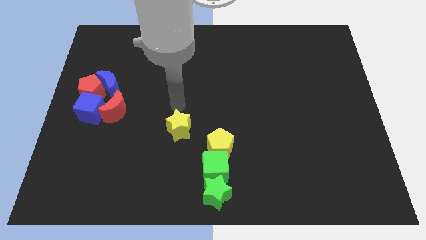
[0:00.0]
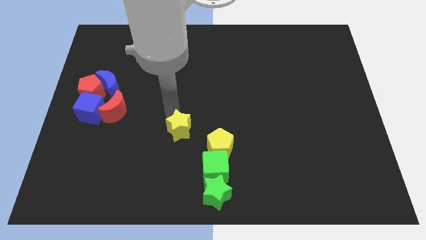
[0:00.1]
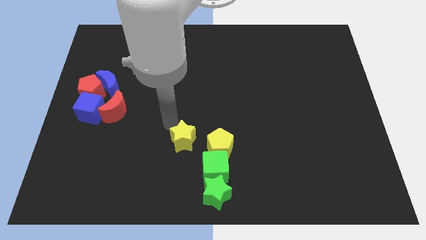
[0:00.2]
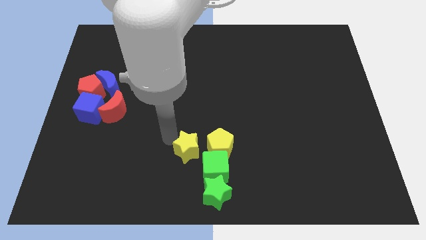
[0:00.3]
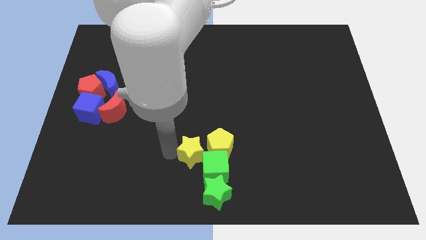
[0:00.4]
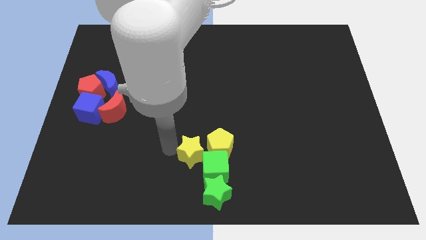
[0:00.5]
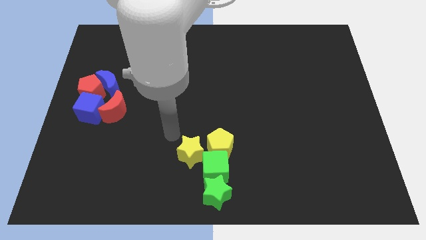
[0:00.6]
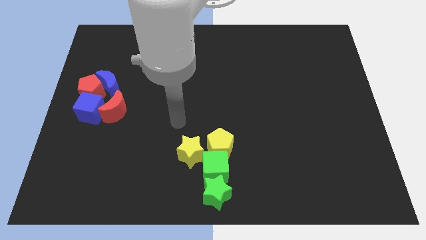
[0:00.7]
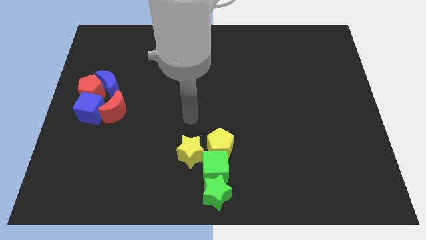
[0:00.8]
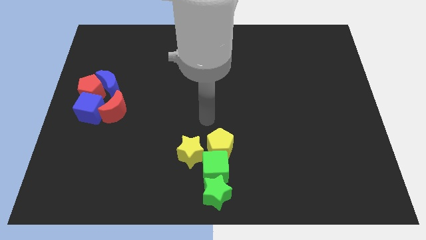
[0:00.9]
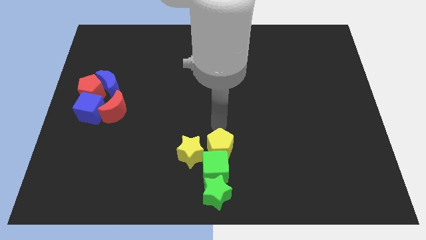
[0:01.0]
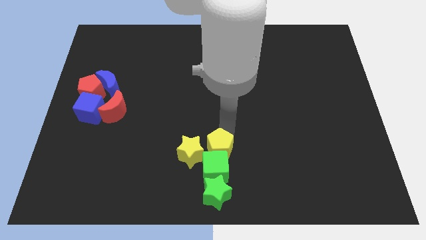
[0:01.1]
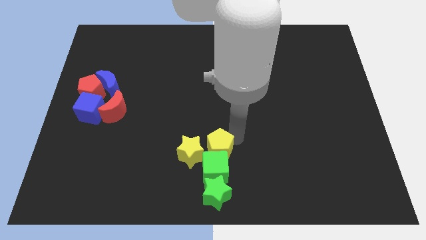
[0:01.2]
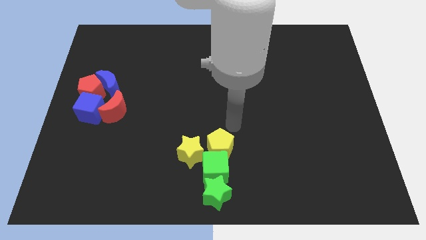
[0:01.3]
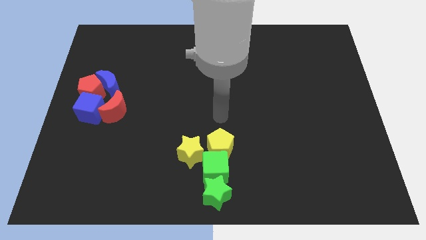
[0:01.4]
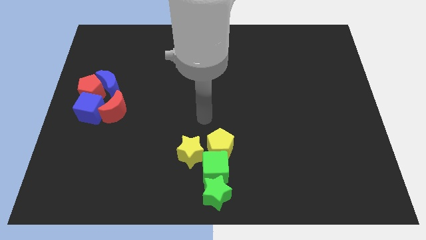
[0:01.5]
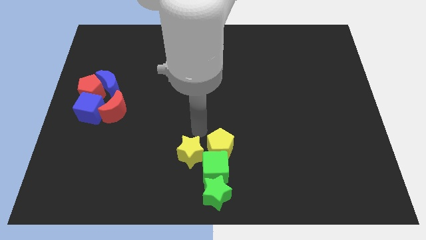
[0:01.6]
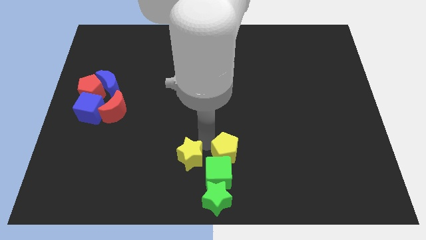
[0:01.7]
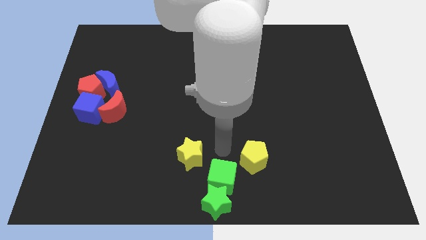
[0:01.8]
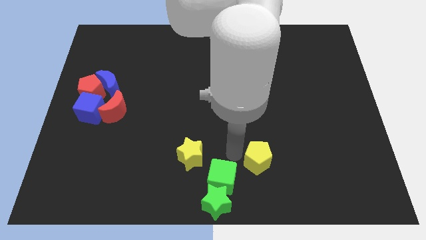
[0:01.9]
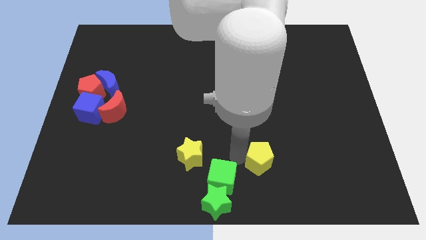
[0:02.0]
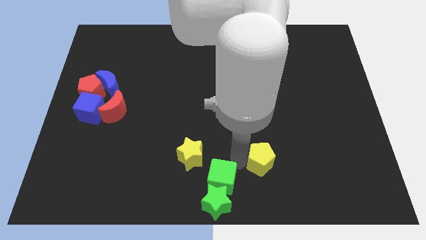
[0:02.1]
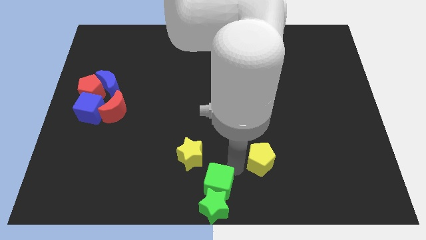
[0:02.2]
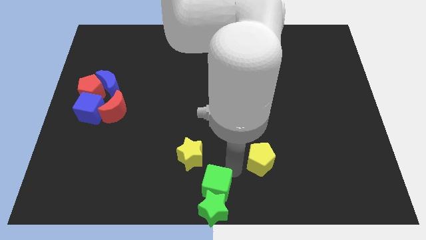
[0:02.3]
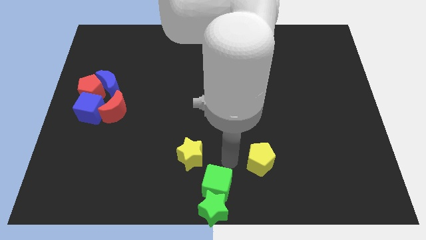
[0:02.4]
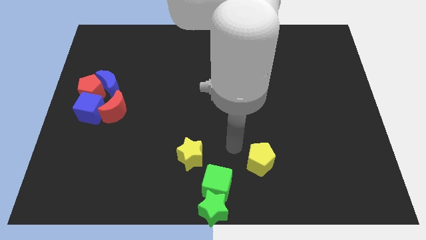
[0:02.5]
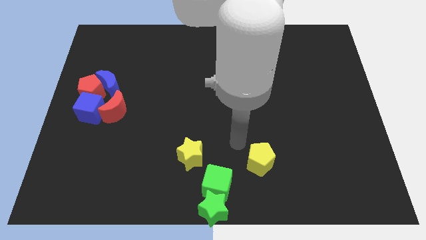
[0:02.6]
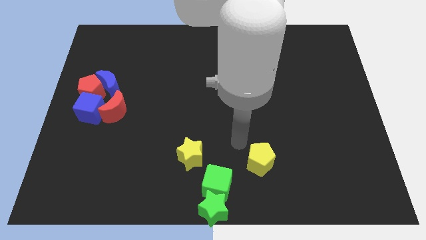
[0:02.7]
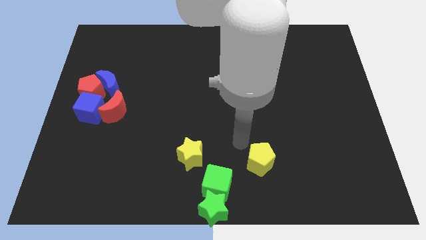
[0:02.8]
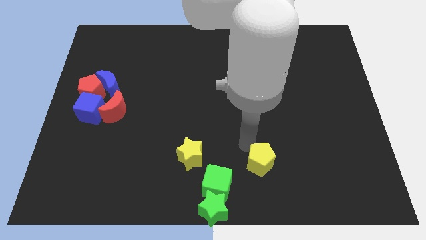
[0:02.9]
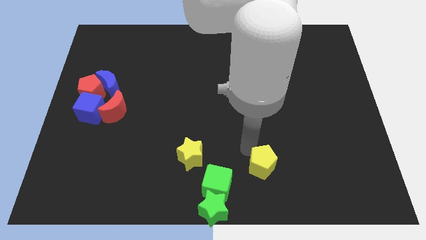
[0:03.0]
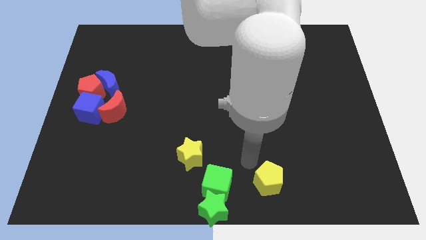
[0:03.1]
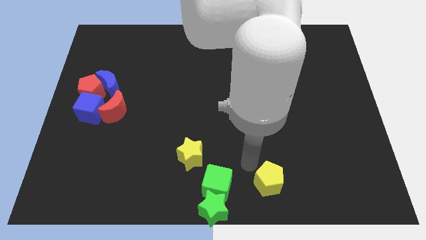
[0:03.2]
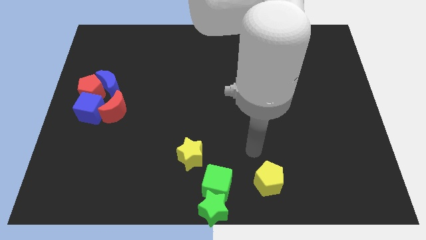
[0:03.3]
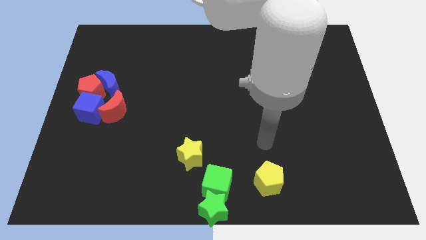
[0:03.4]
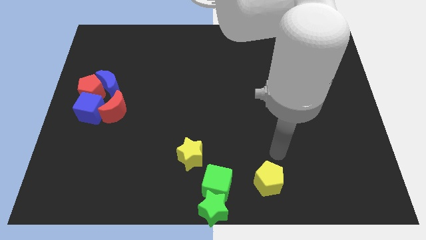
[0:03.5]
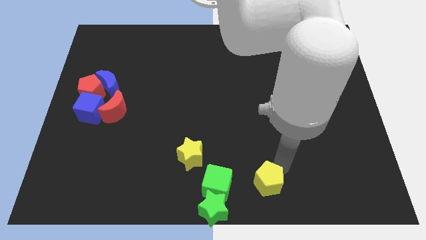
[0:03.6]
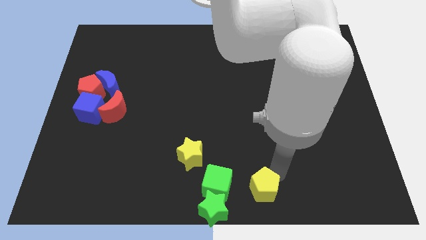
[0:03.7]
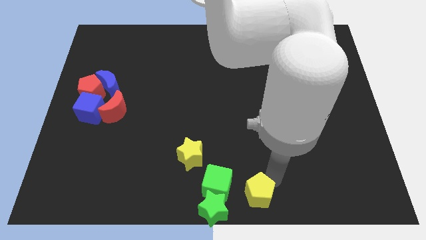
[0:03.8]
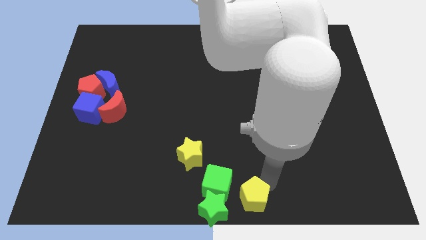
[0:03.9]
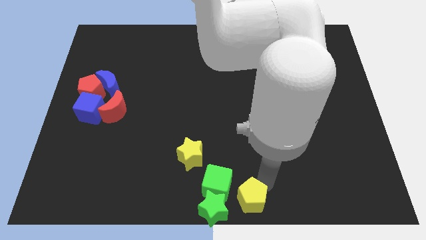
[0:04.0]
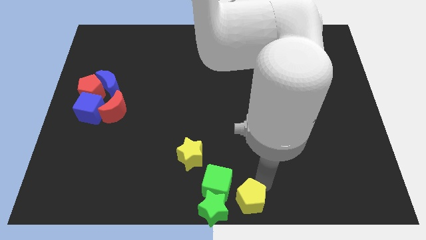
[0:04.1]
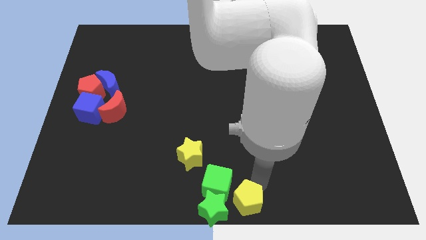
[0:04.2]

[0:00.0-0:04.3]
push the yellow pentagon to the bottom center of the board

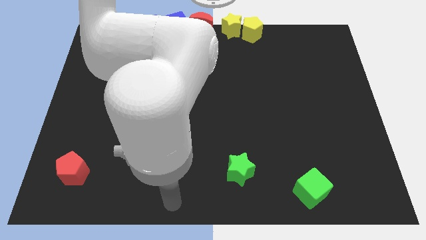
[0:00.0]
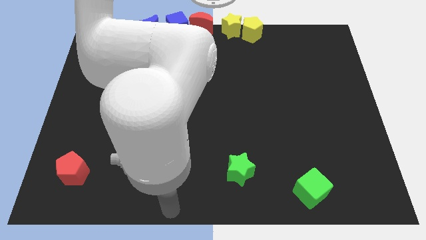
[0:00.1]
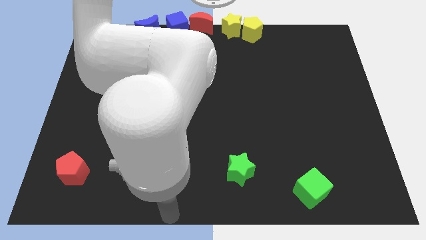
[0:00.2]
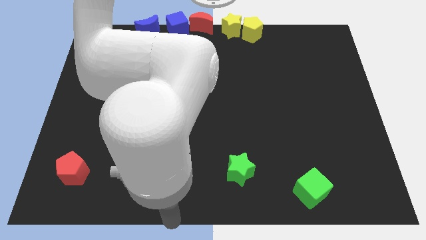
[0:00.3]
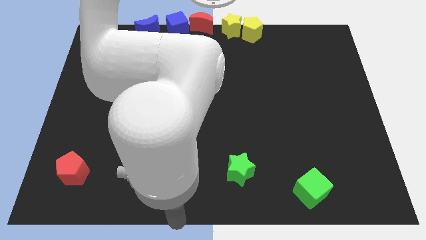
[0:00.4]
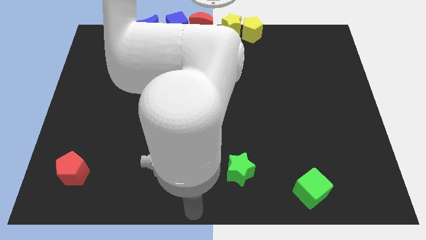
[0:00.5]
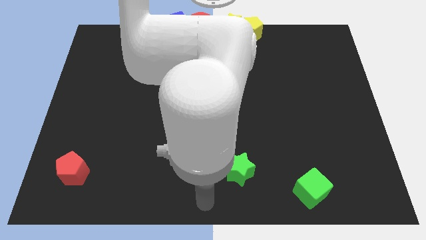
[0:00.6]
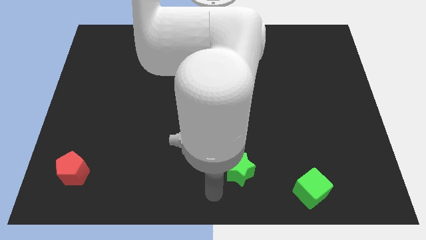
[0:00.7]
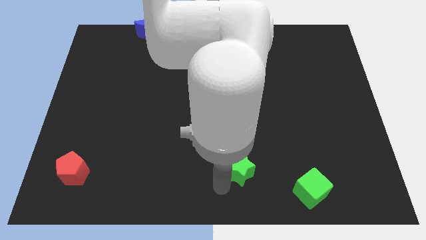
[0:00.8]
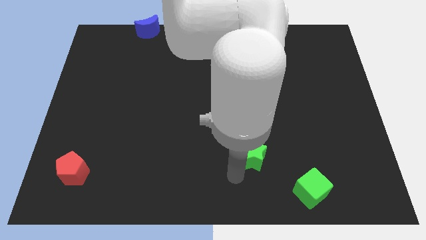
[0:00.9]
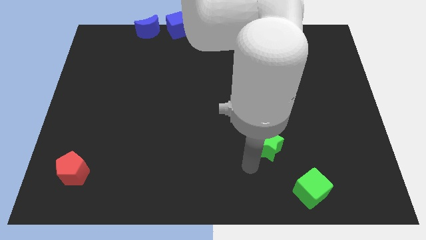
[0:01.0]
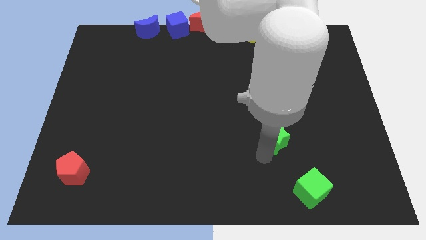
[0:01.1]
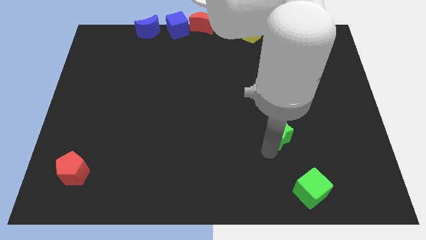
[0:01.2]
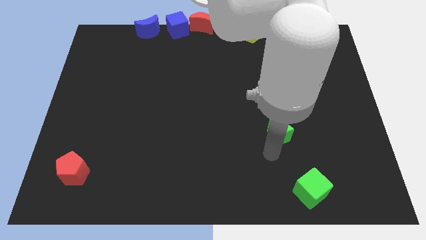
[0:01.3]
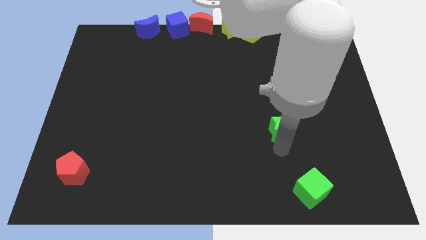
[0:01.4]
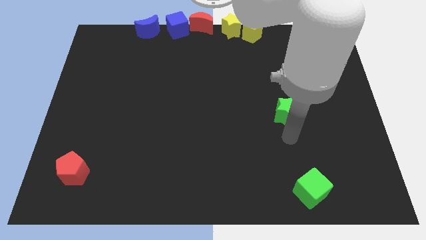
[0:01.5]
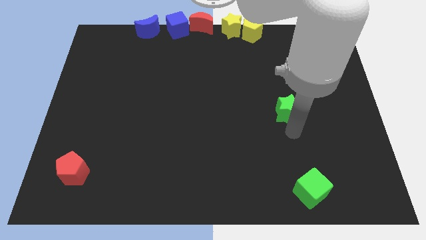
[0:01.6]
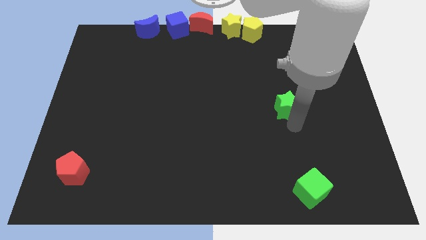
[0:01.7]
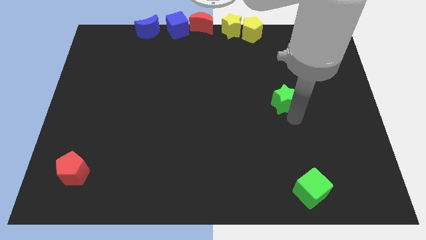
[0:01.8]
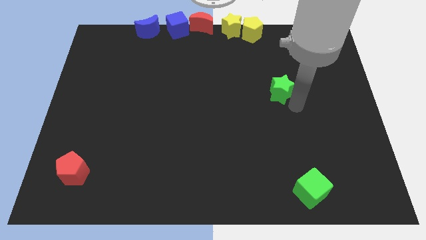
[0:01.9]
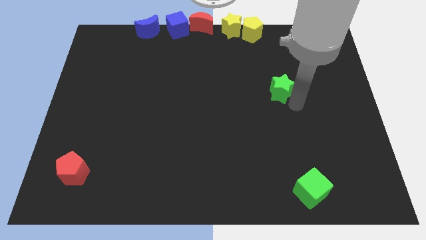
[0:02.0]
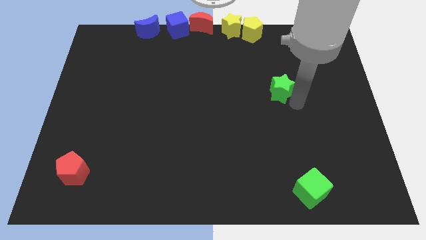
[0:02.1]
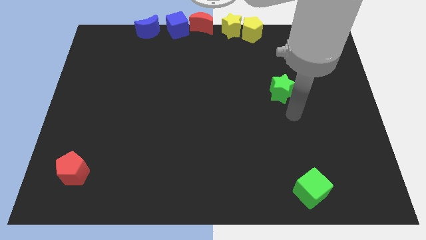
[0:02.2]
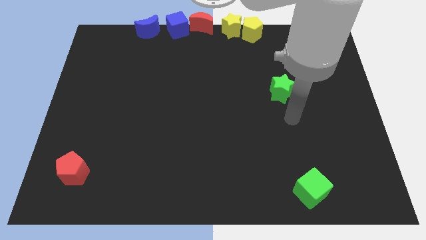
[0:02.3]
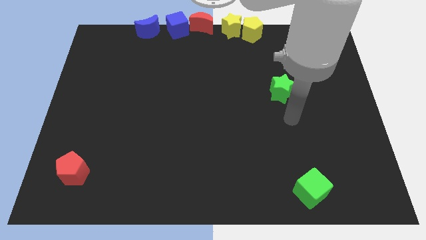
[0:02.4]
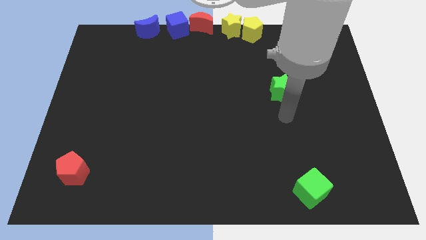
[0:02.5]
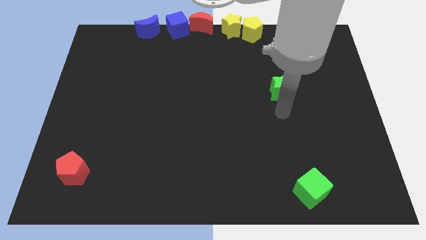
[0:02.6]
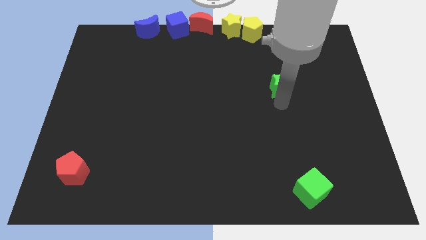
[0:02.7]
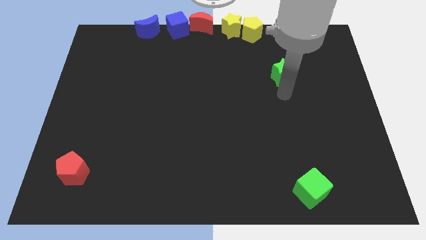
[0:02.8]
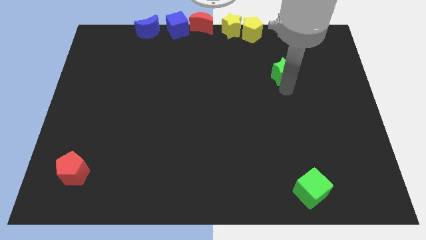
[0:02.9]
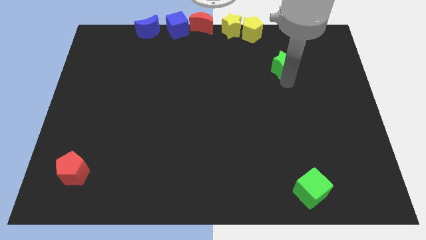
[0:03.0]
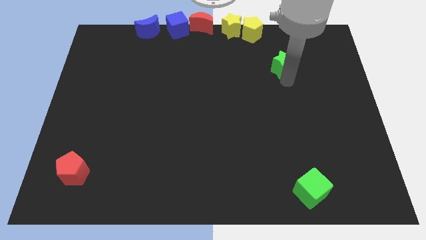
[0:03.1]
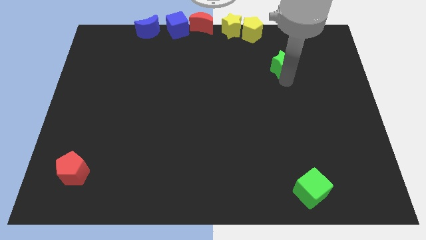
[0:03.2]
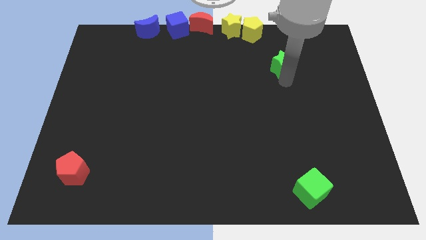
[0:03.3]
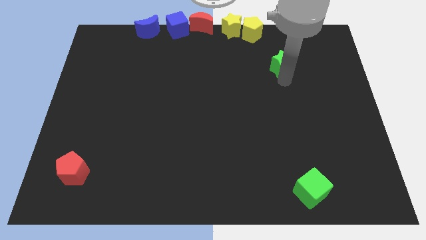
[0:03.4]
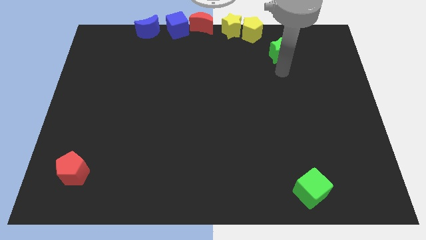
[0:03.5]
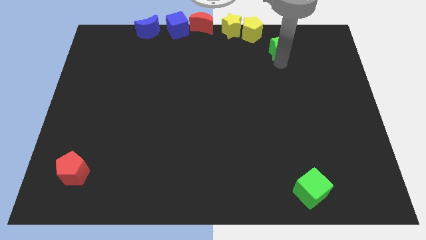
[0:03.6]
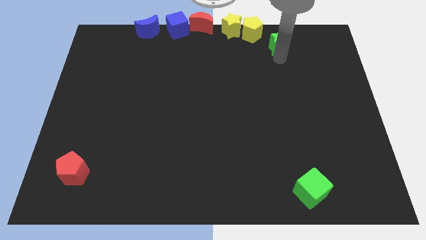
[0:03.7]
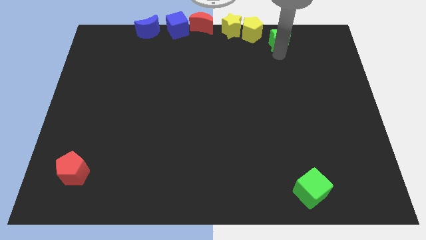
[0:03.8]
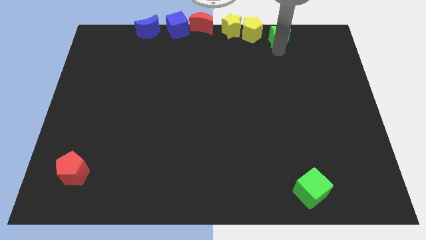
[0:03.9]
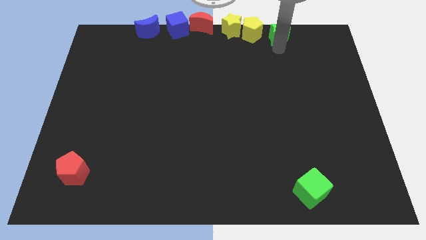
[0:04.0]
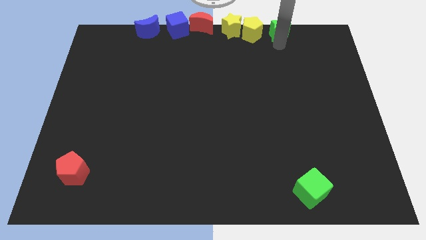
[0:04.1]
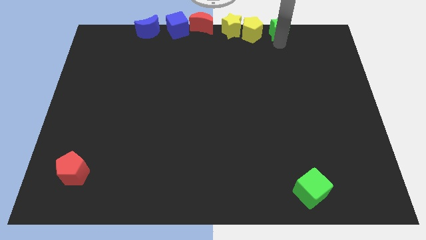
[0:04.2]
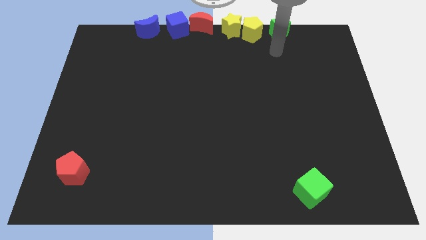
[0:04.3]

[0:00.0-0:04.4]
put the green star to the right of the yellow pentagon

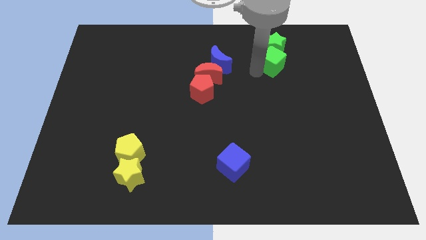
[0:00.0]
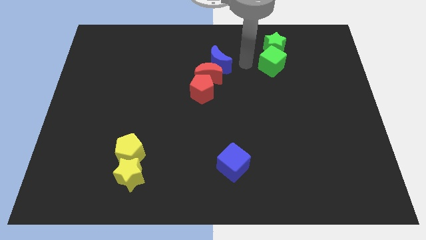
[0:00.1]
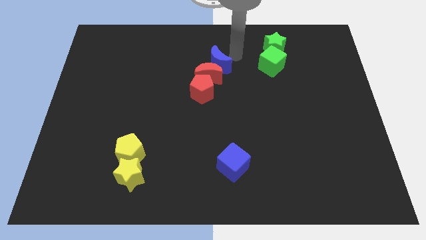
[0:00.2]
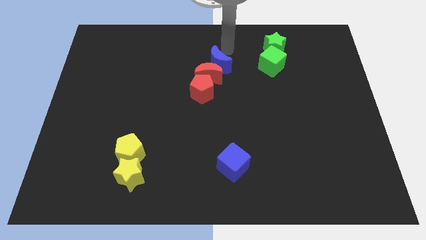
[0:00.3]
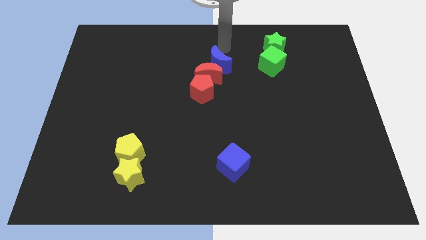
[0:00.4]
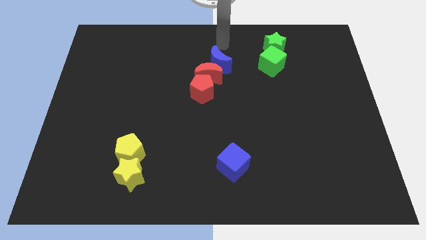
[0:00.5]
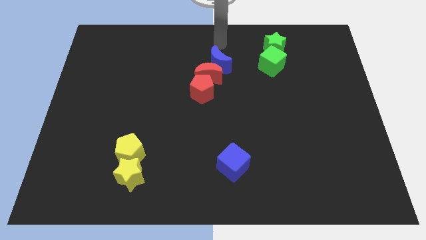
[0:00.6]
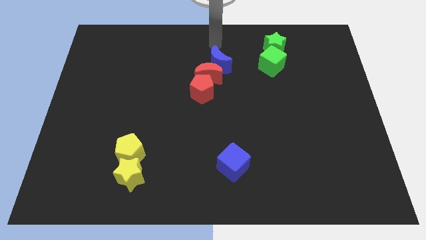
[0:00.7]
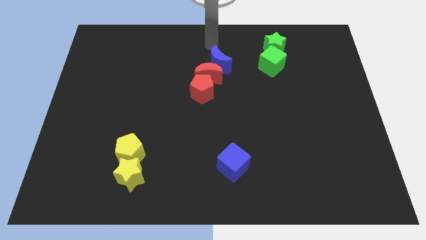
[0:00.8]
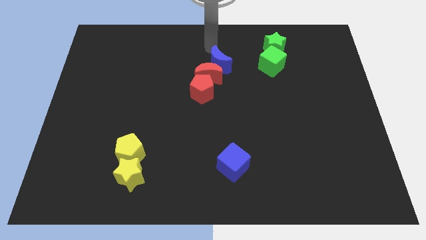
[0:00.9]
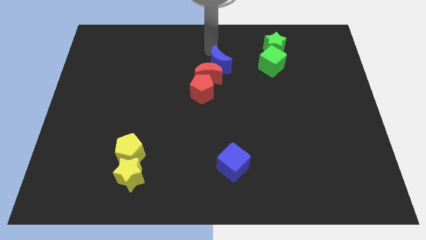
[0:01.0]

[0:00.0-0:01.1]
move your arm towards the blue crescent
